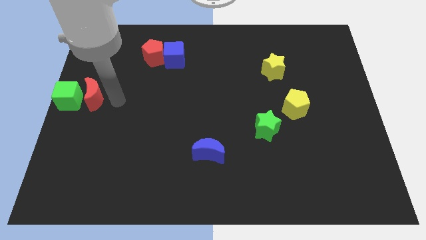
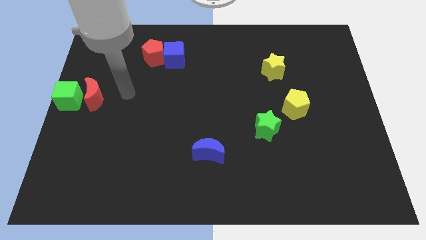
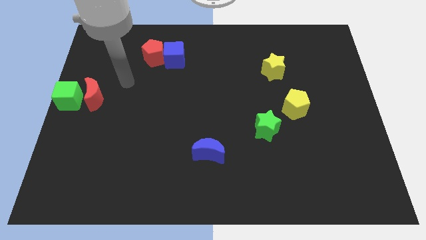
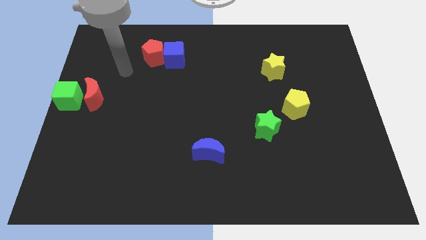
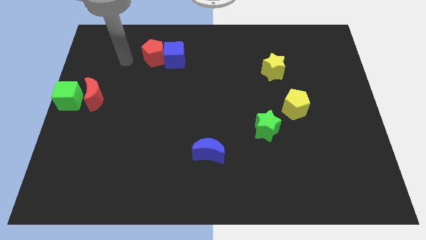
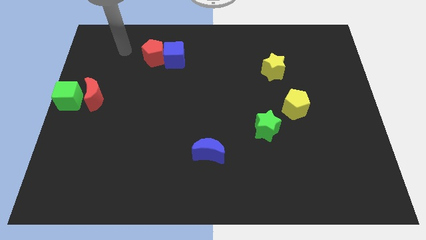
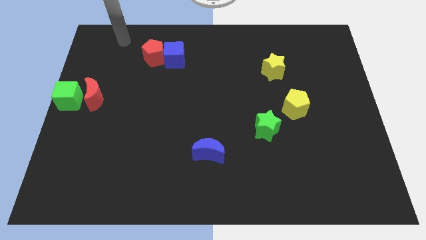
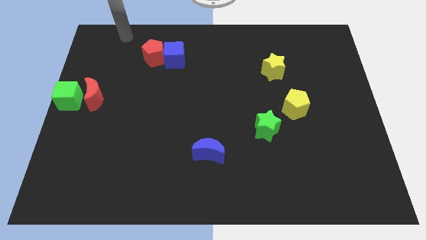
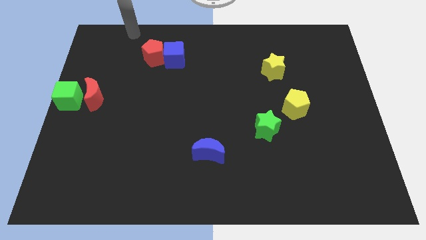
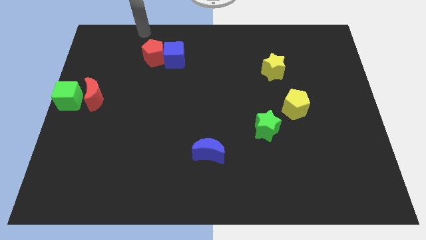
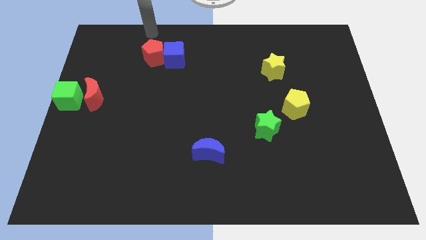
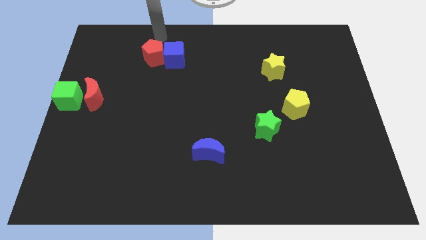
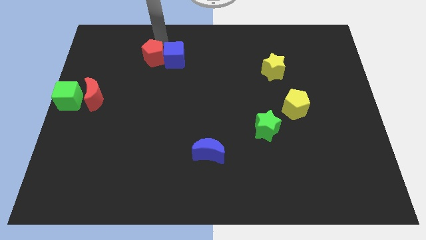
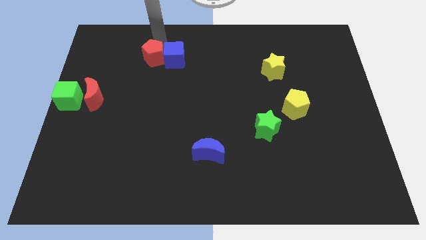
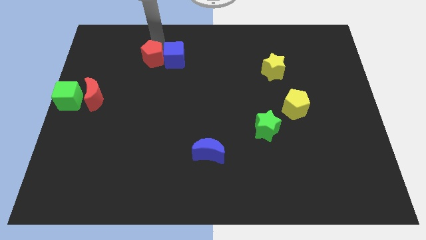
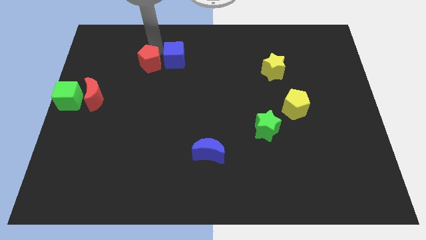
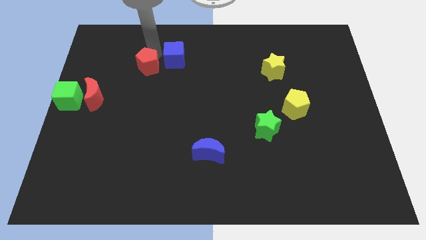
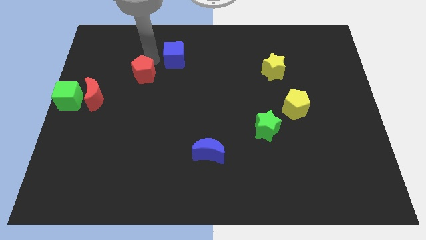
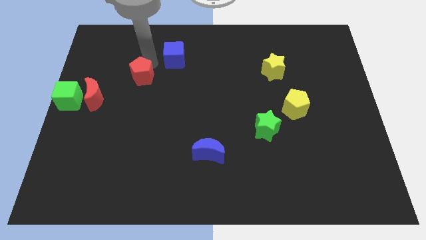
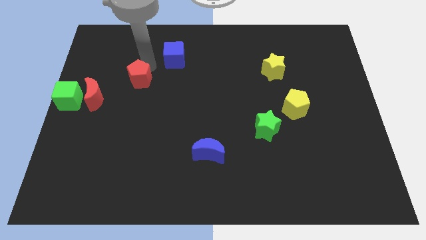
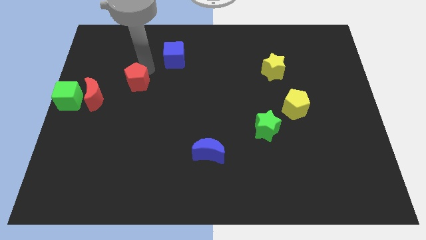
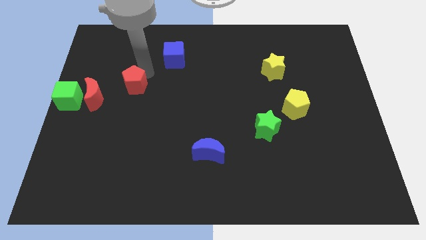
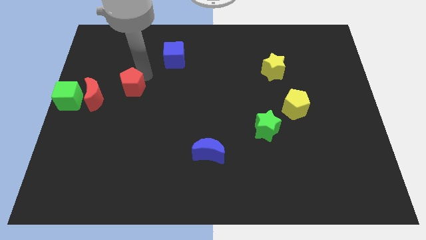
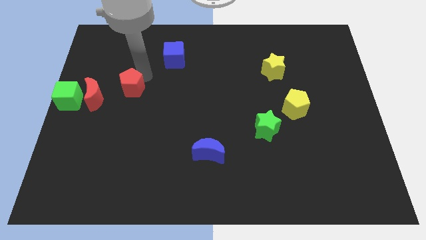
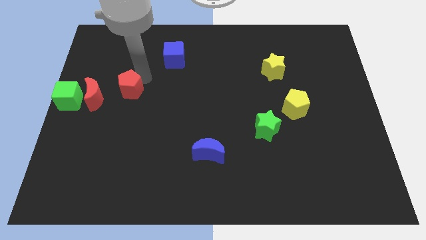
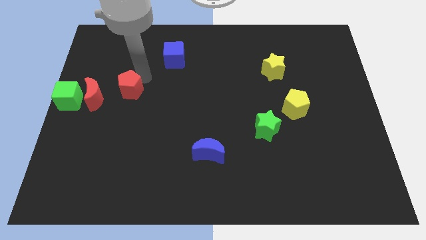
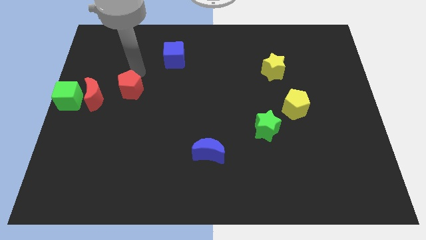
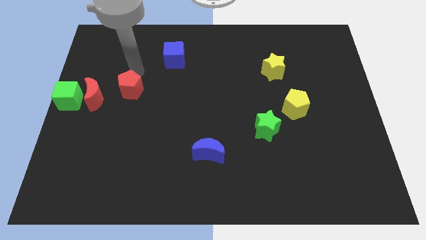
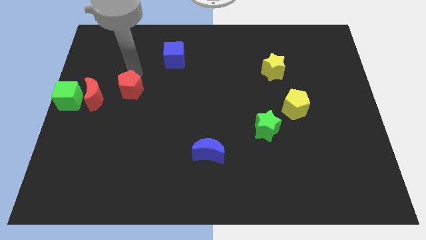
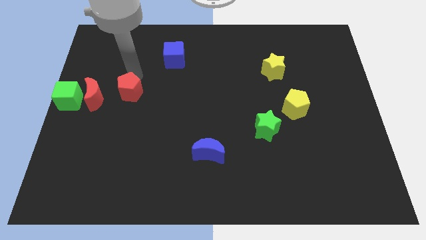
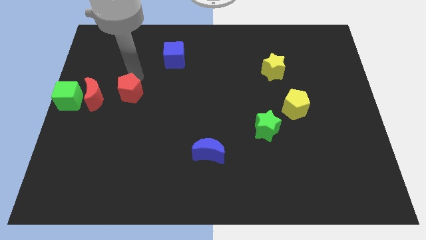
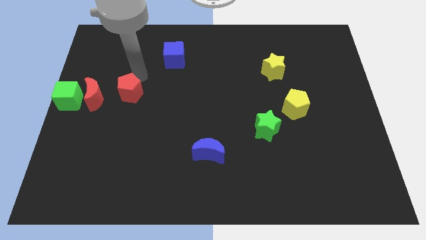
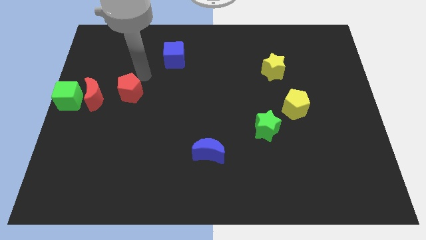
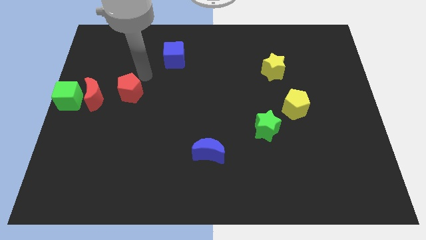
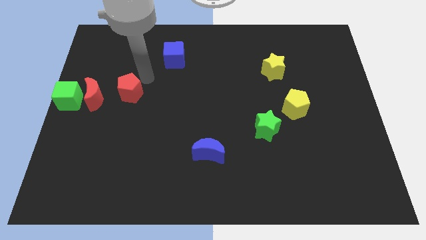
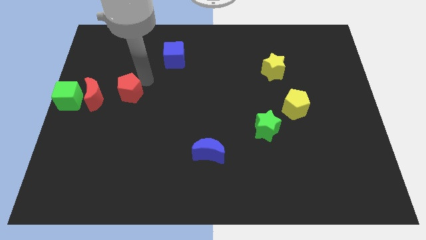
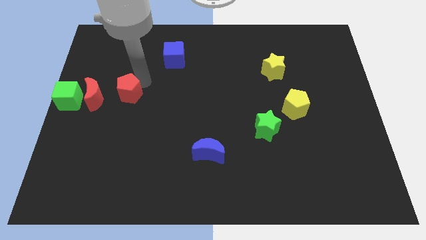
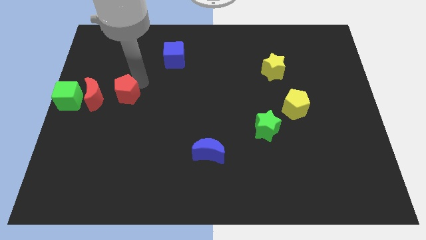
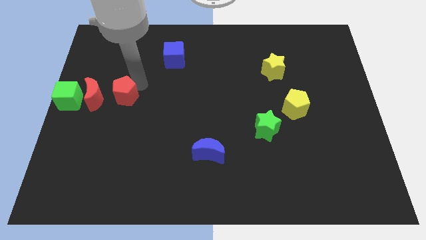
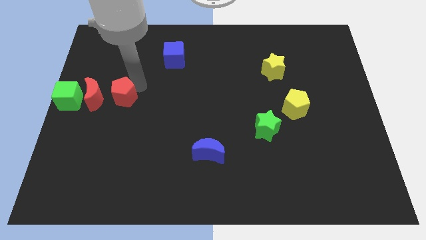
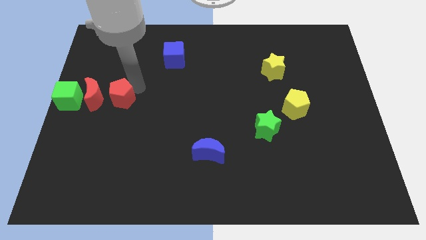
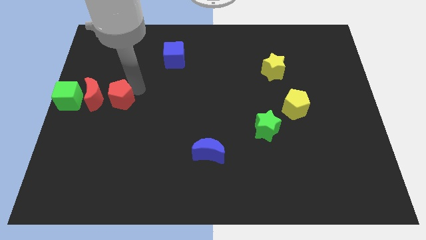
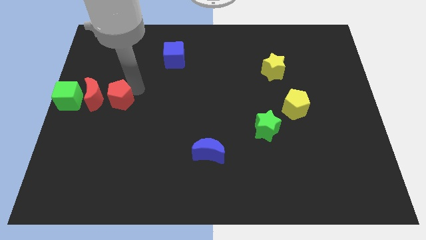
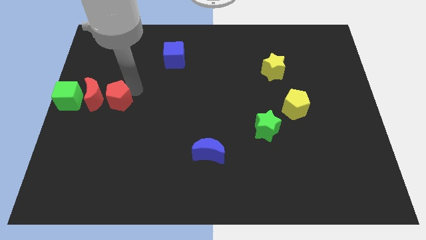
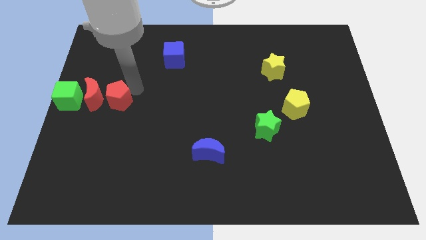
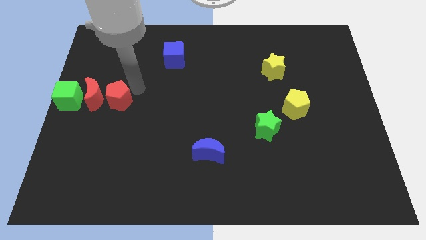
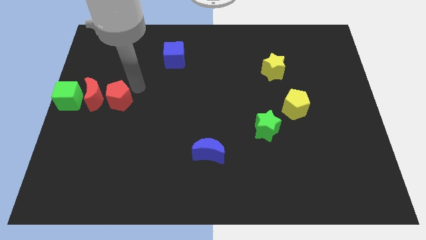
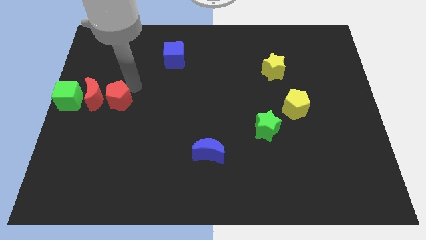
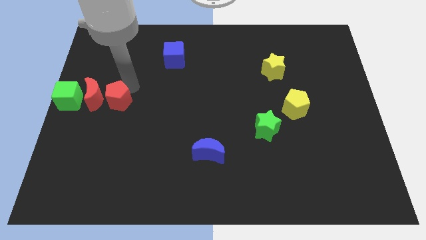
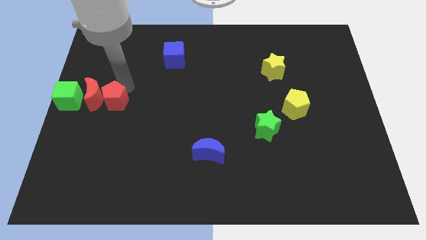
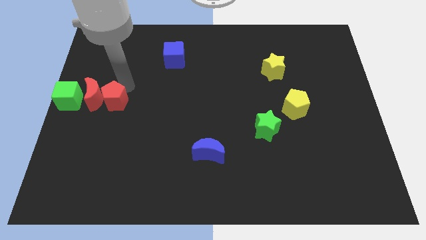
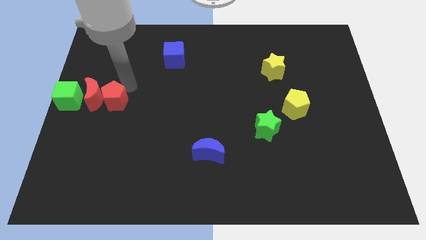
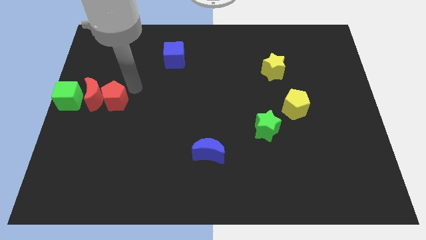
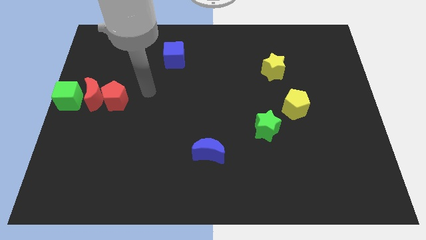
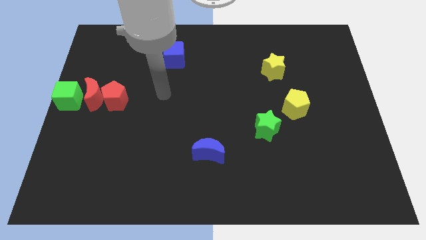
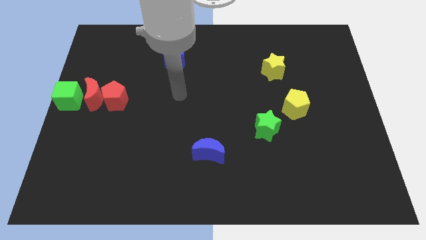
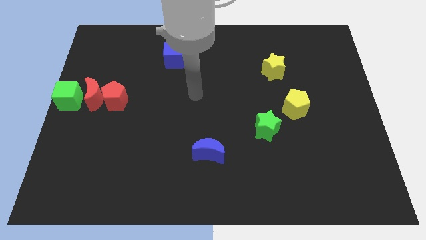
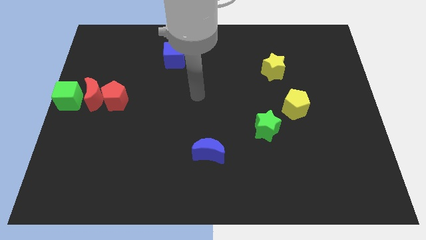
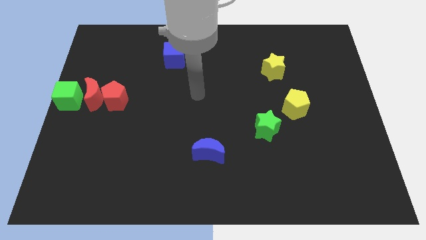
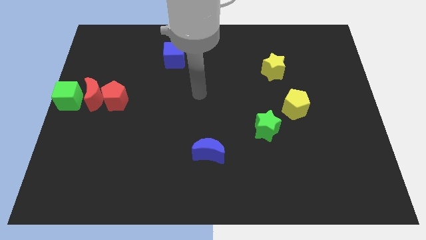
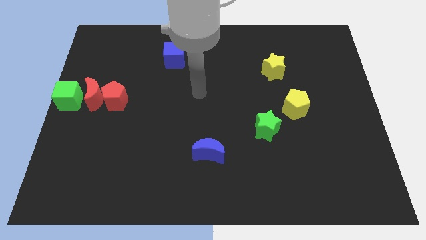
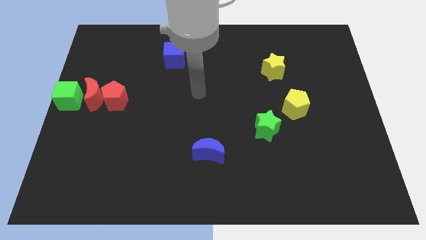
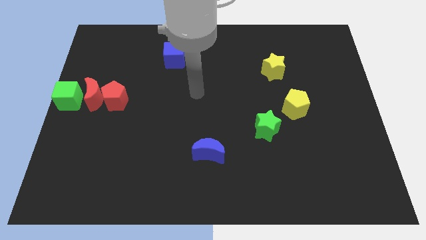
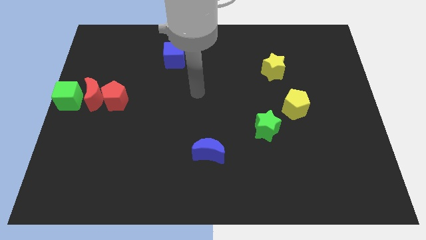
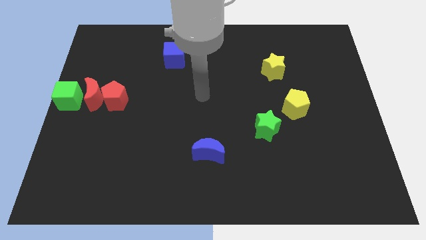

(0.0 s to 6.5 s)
move the red pentagon into red crescent

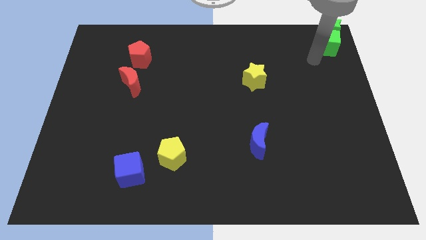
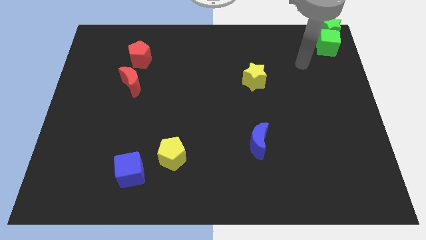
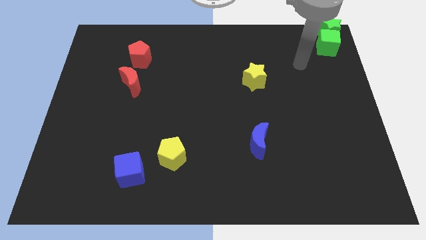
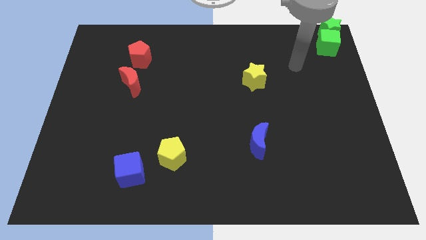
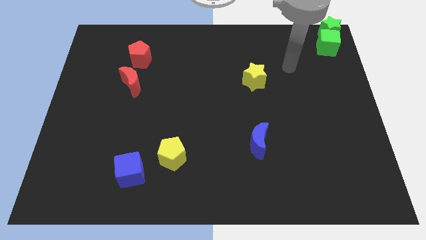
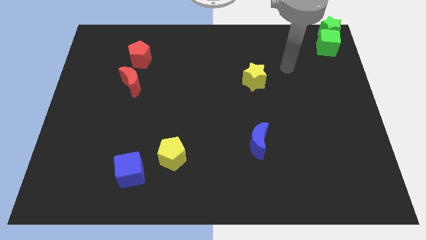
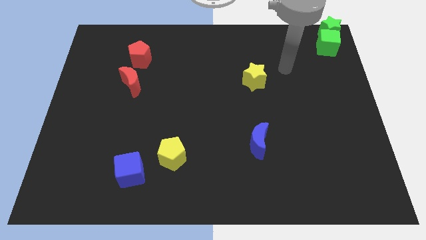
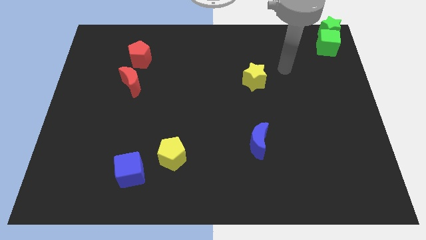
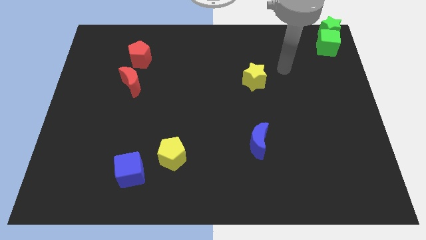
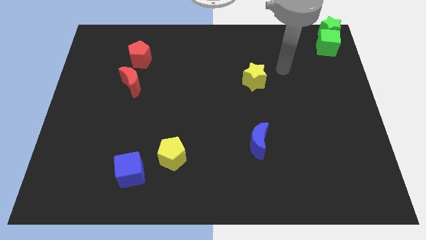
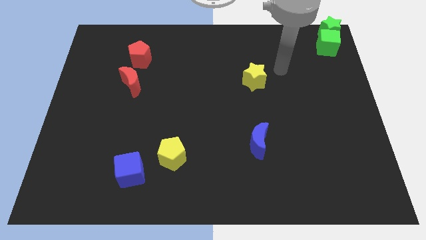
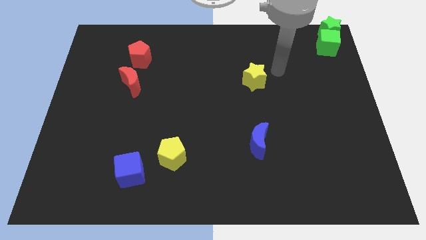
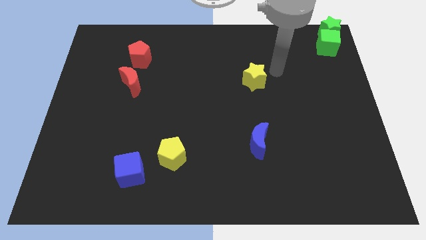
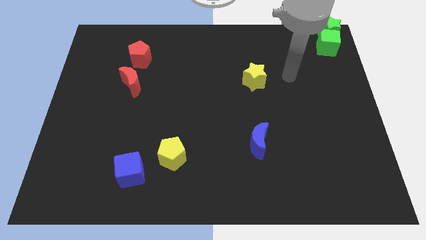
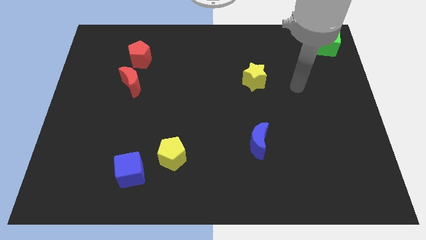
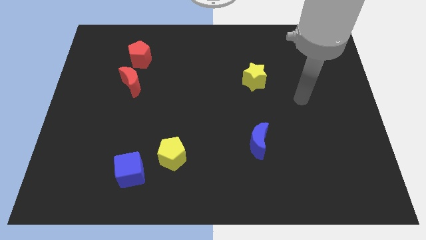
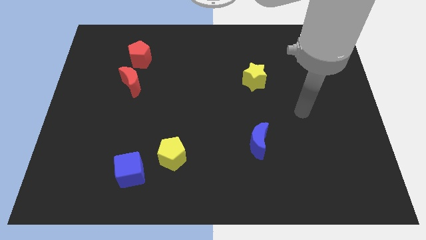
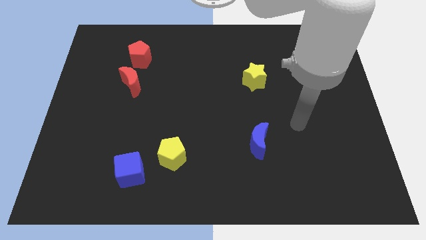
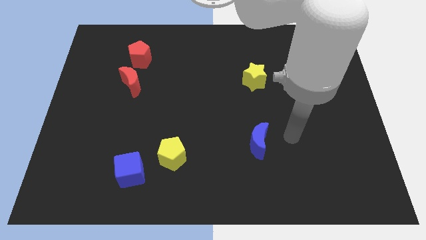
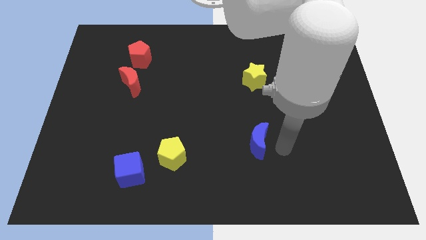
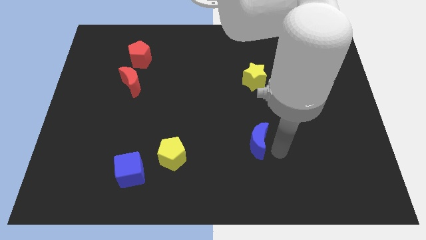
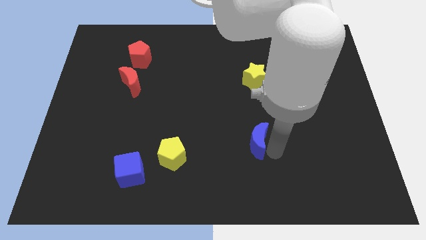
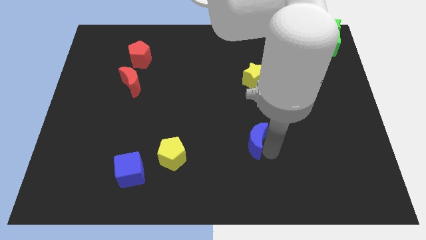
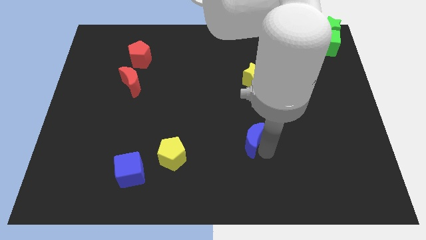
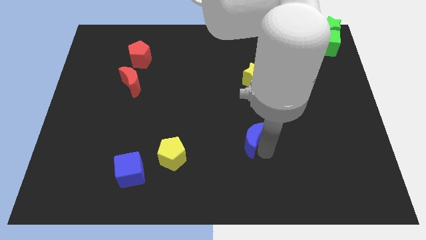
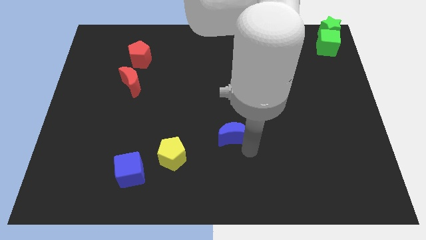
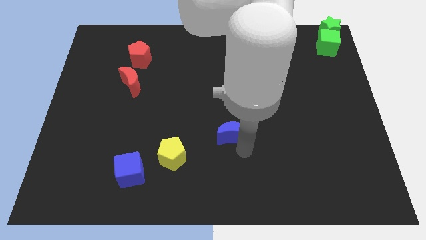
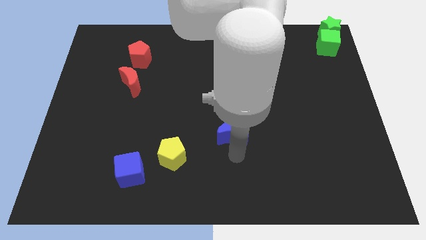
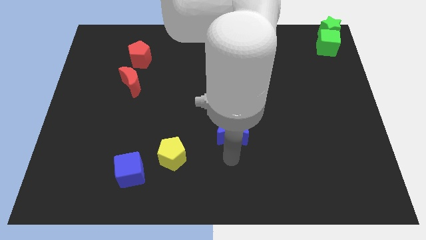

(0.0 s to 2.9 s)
placed the blue cube diagonally to yellow pentagon
